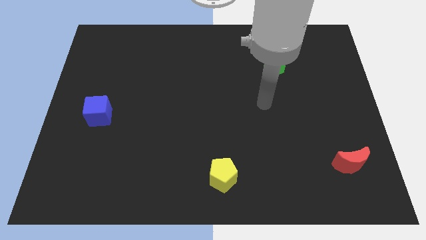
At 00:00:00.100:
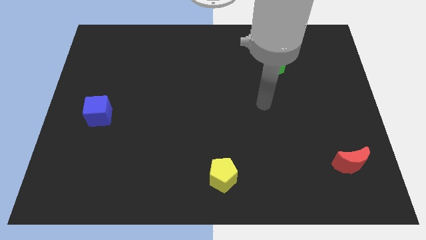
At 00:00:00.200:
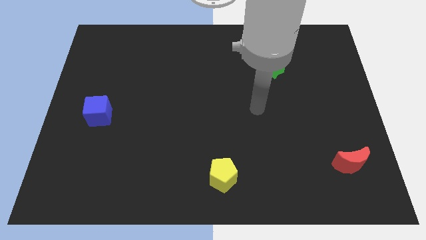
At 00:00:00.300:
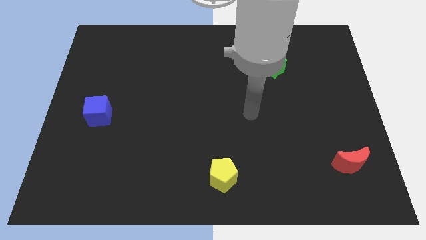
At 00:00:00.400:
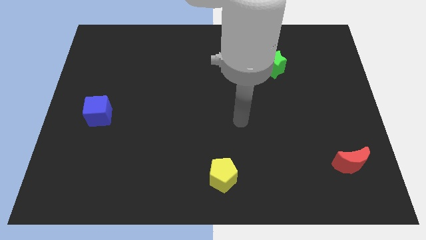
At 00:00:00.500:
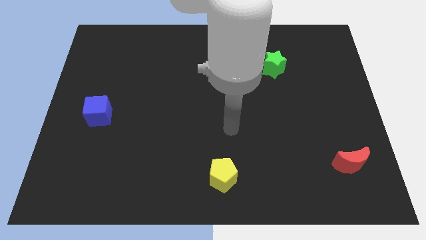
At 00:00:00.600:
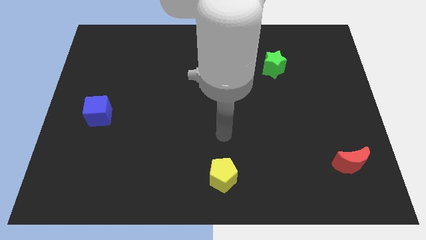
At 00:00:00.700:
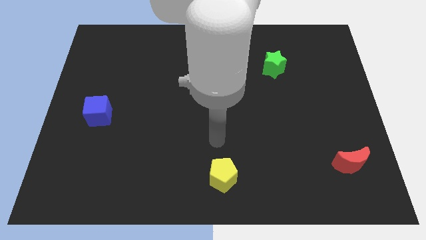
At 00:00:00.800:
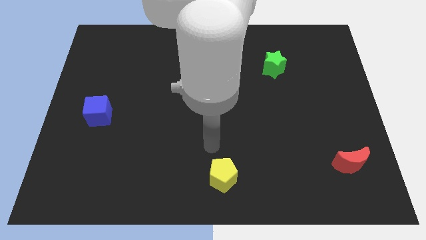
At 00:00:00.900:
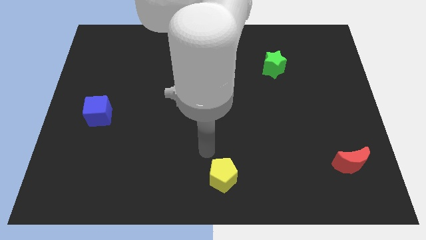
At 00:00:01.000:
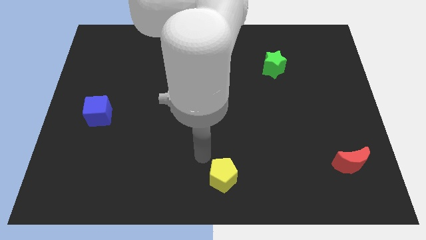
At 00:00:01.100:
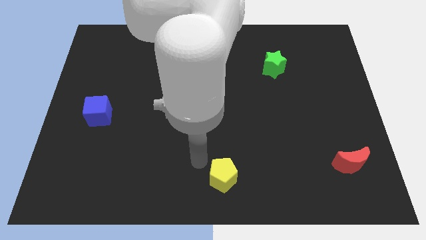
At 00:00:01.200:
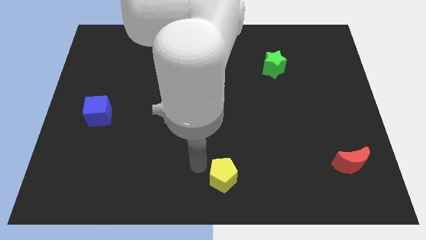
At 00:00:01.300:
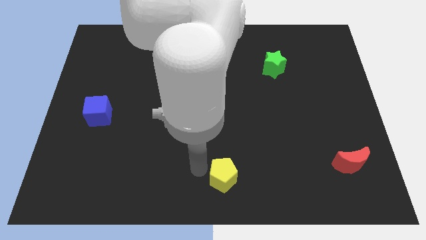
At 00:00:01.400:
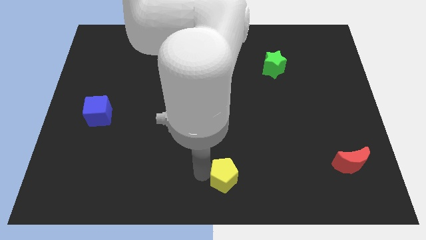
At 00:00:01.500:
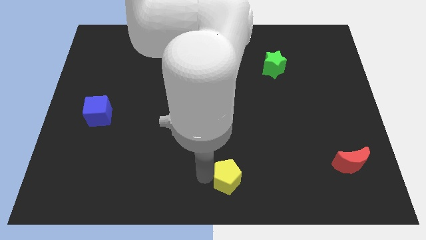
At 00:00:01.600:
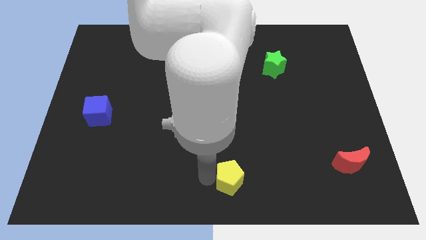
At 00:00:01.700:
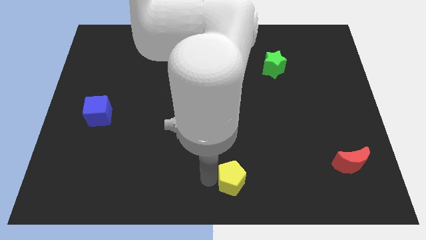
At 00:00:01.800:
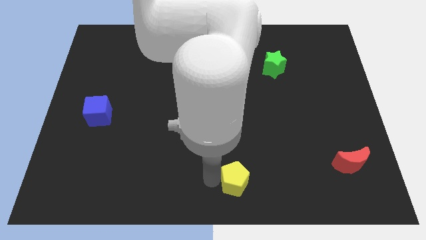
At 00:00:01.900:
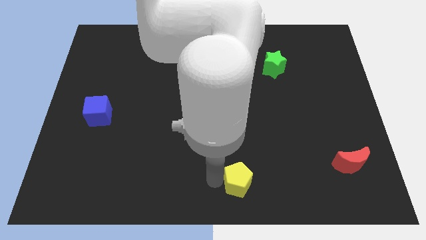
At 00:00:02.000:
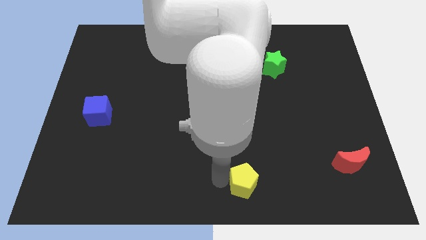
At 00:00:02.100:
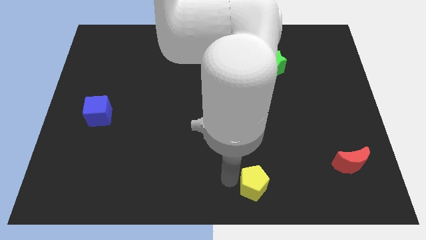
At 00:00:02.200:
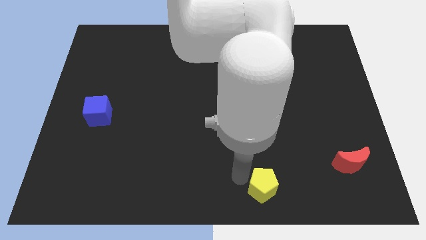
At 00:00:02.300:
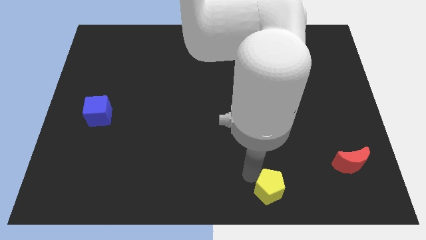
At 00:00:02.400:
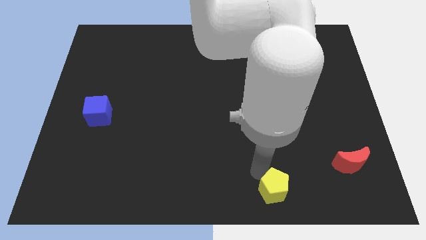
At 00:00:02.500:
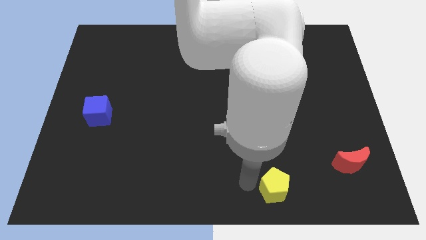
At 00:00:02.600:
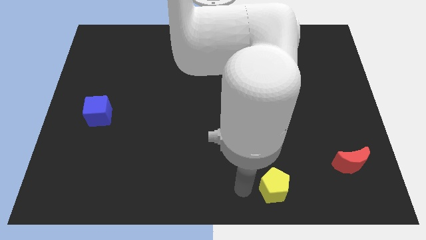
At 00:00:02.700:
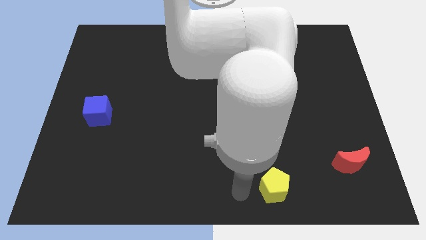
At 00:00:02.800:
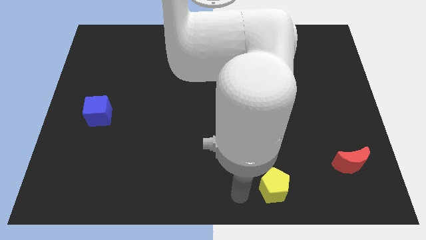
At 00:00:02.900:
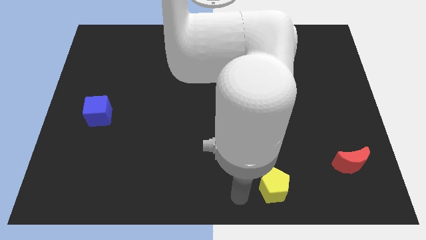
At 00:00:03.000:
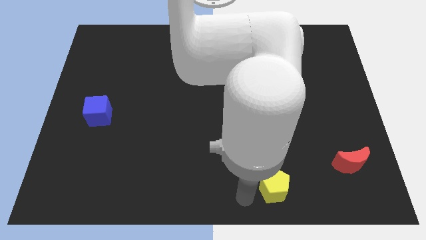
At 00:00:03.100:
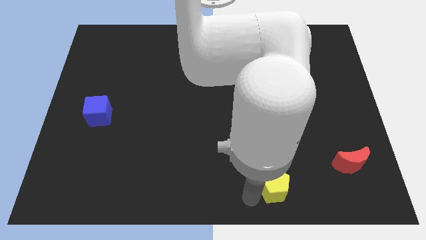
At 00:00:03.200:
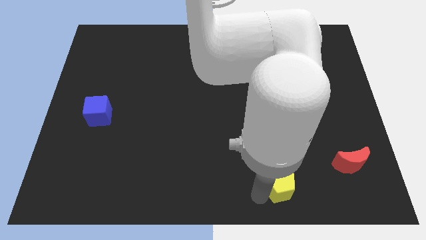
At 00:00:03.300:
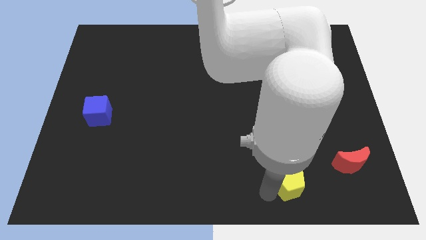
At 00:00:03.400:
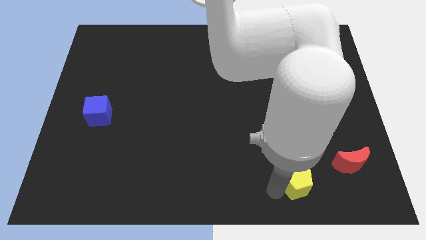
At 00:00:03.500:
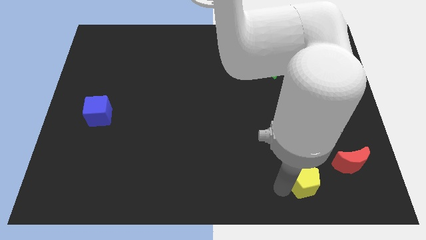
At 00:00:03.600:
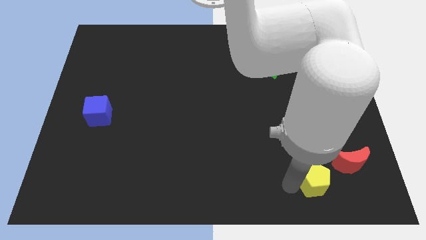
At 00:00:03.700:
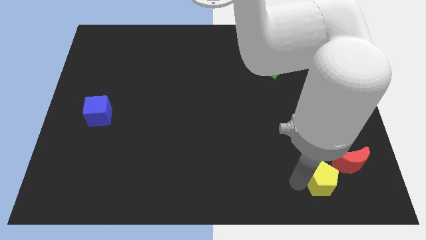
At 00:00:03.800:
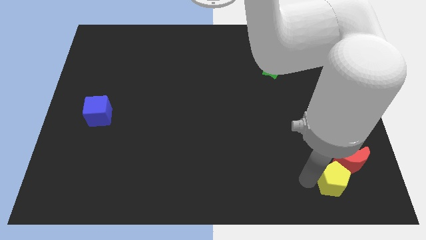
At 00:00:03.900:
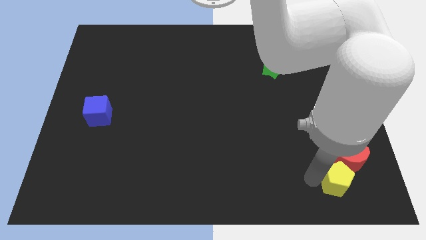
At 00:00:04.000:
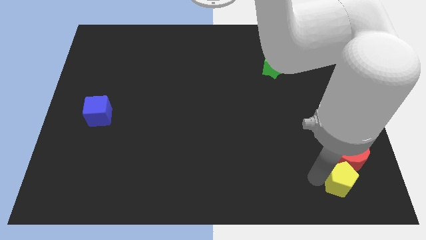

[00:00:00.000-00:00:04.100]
push the yellow block to the red moon

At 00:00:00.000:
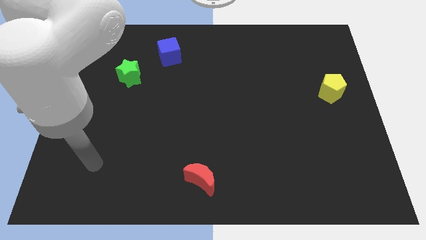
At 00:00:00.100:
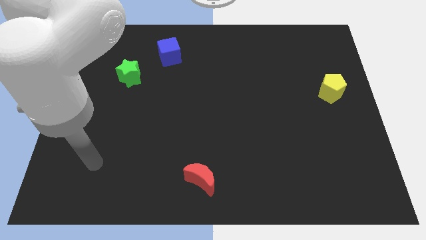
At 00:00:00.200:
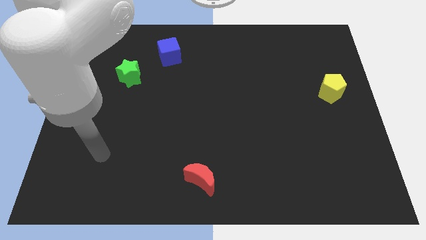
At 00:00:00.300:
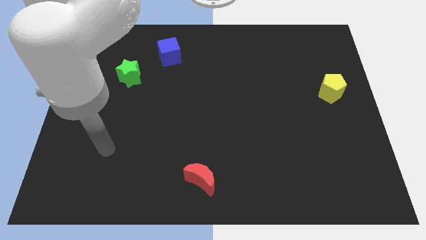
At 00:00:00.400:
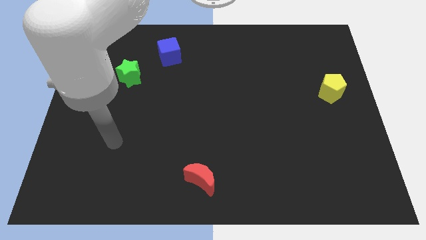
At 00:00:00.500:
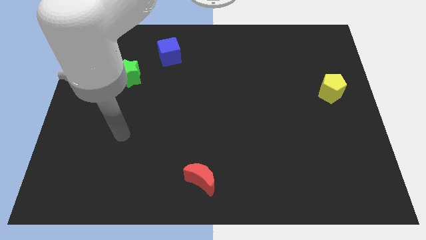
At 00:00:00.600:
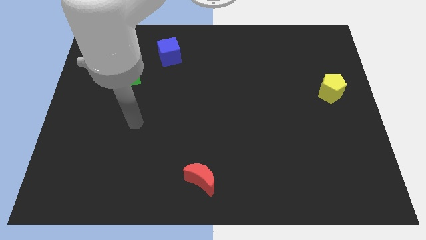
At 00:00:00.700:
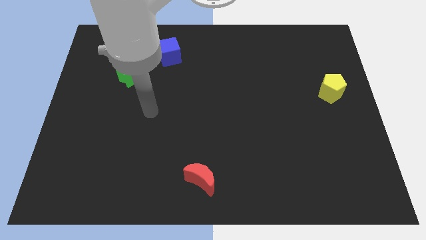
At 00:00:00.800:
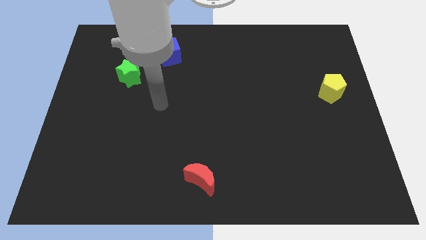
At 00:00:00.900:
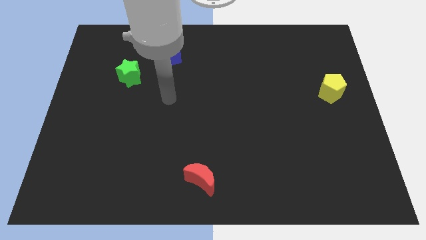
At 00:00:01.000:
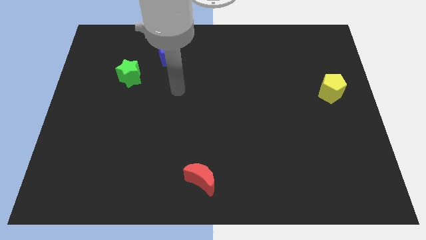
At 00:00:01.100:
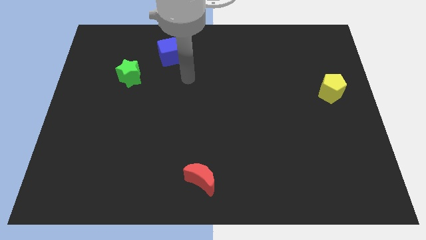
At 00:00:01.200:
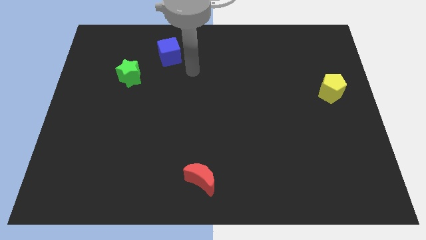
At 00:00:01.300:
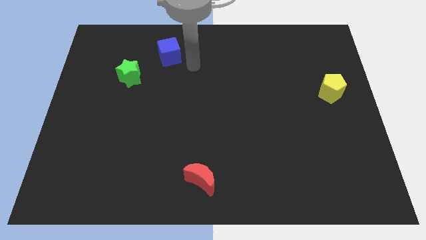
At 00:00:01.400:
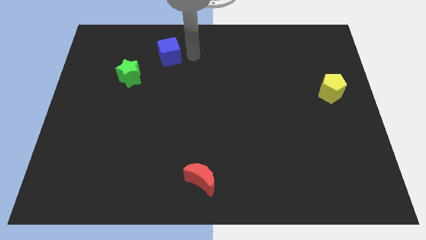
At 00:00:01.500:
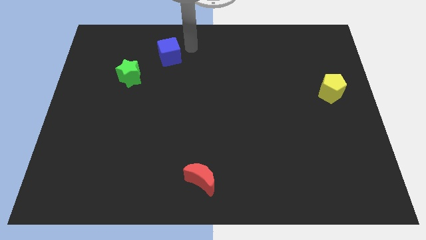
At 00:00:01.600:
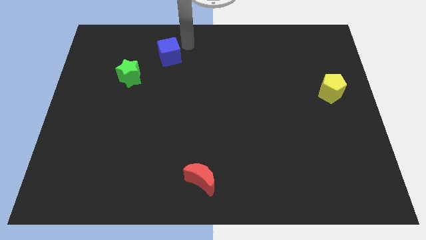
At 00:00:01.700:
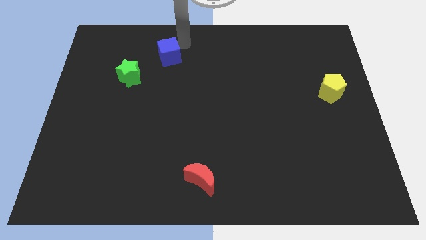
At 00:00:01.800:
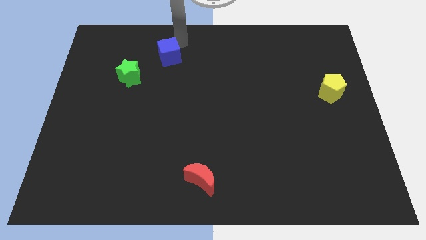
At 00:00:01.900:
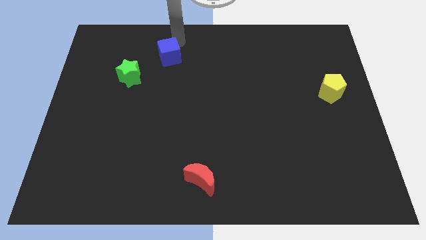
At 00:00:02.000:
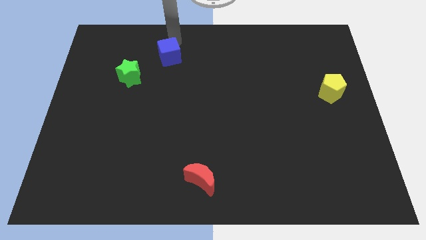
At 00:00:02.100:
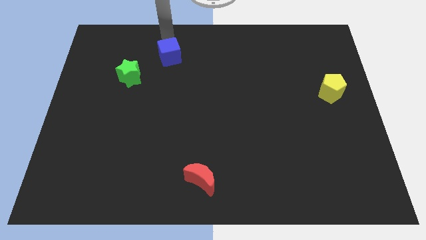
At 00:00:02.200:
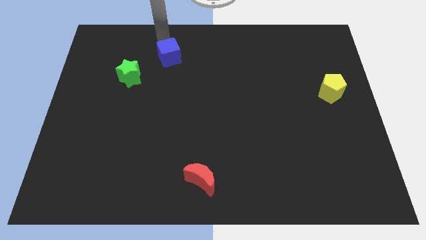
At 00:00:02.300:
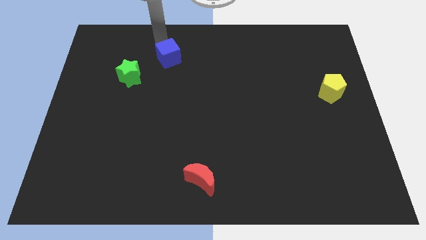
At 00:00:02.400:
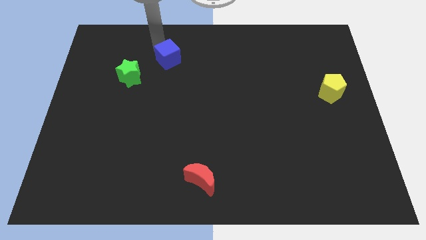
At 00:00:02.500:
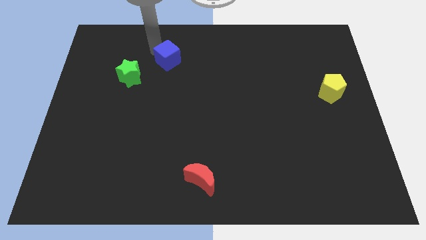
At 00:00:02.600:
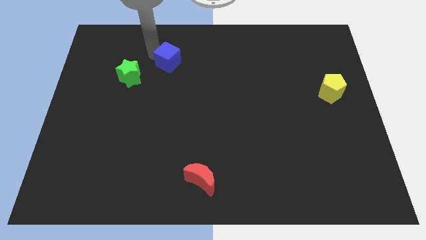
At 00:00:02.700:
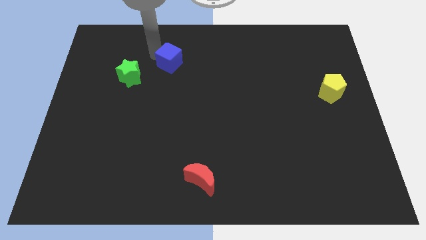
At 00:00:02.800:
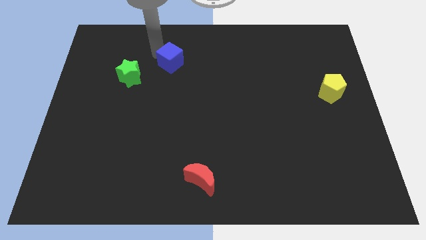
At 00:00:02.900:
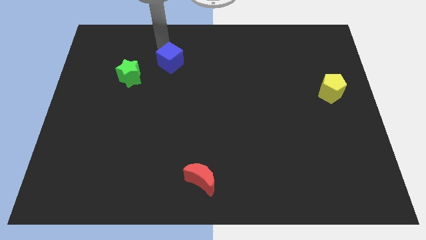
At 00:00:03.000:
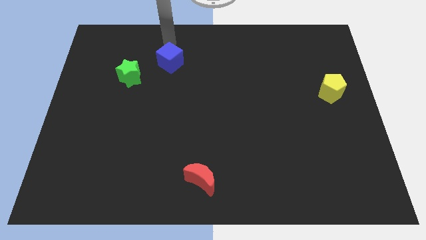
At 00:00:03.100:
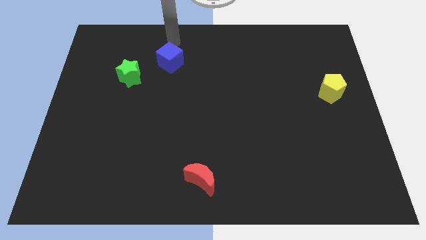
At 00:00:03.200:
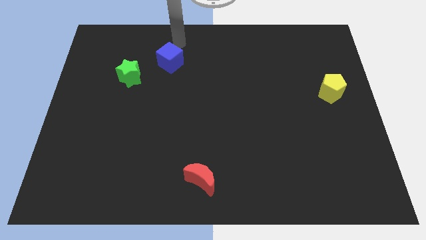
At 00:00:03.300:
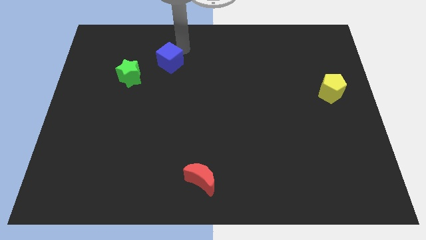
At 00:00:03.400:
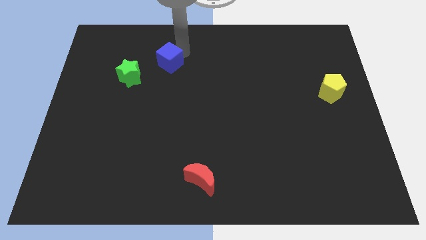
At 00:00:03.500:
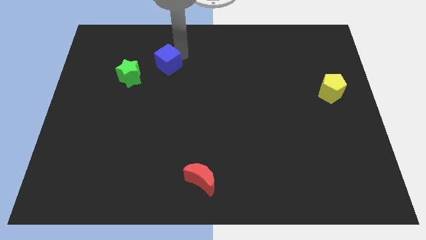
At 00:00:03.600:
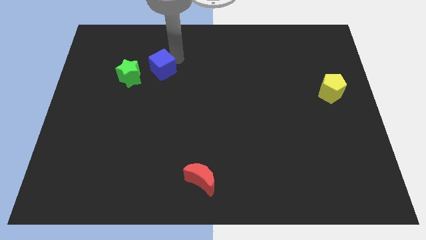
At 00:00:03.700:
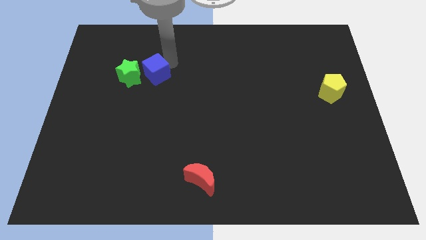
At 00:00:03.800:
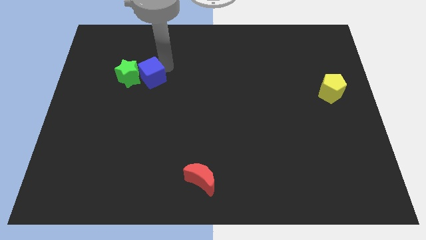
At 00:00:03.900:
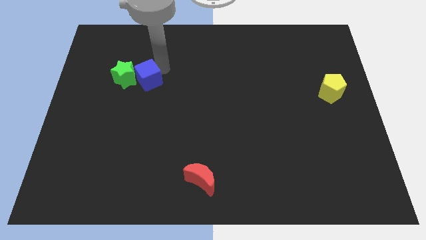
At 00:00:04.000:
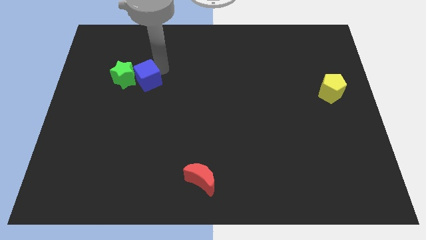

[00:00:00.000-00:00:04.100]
put the blue cube close to the star

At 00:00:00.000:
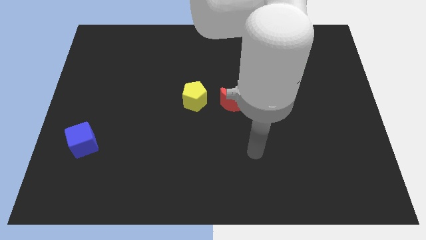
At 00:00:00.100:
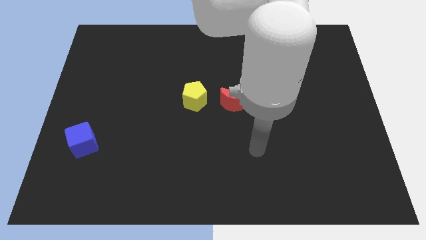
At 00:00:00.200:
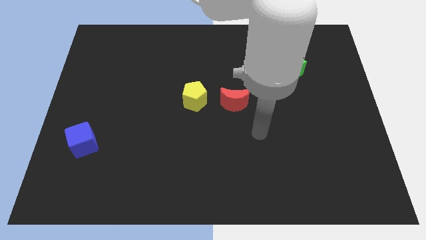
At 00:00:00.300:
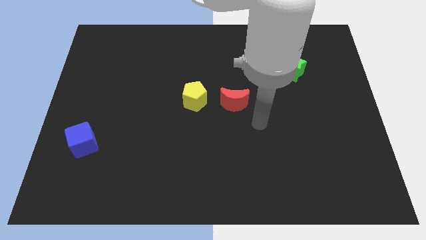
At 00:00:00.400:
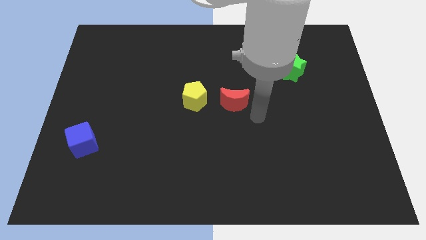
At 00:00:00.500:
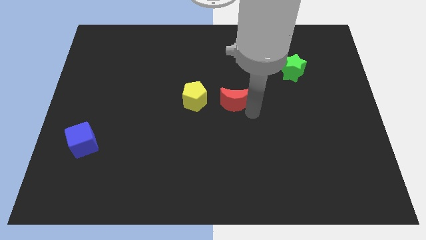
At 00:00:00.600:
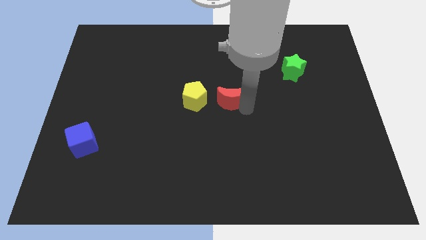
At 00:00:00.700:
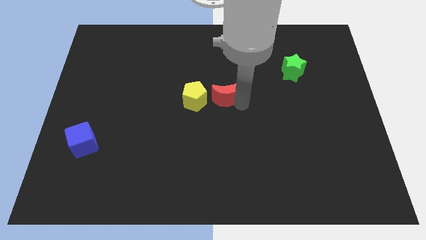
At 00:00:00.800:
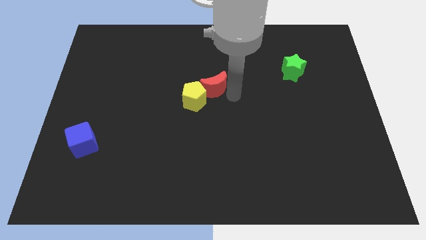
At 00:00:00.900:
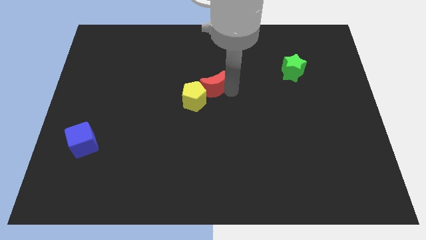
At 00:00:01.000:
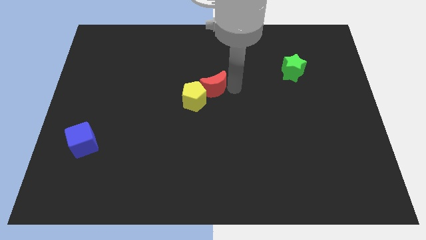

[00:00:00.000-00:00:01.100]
push the red moon towards the pentagon
